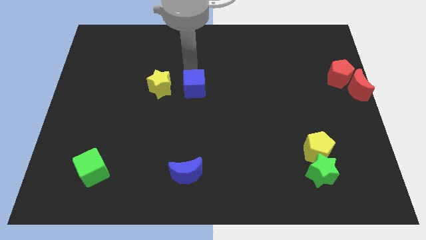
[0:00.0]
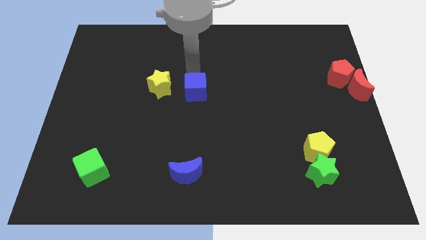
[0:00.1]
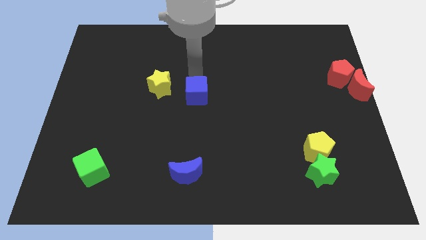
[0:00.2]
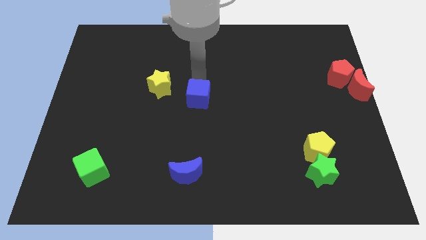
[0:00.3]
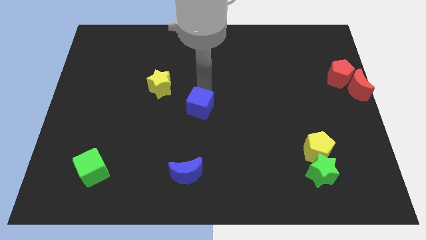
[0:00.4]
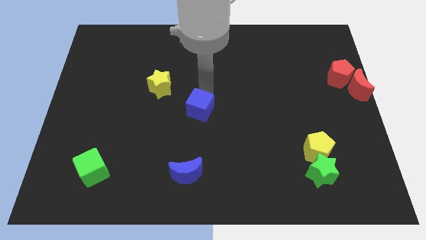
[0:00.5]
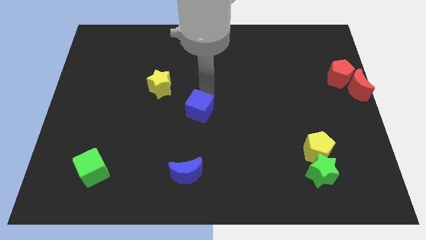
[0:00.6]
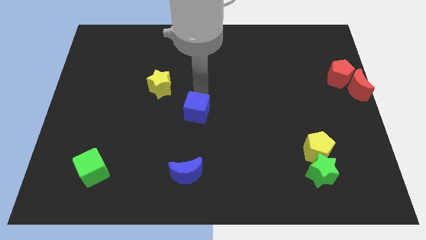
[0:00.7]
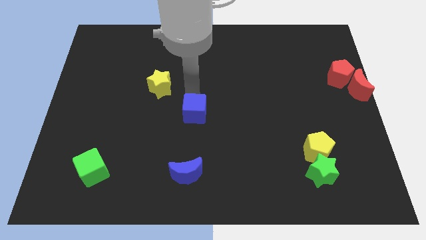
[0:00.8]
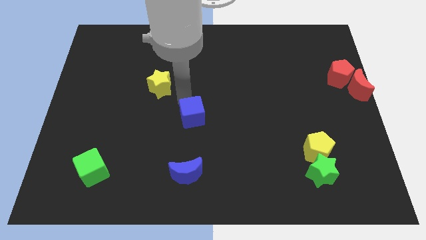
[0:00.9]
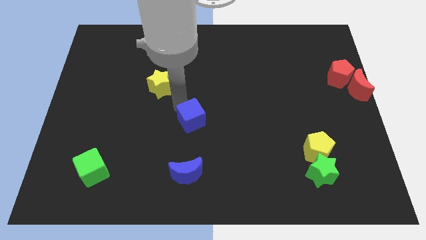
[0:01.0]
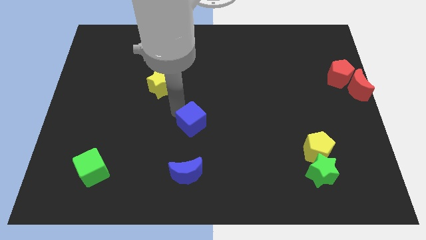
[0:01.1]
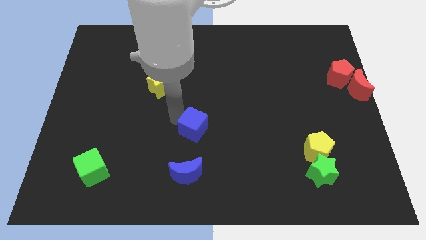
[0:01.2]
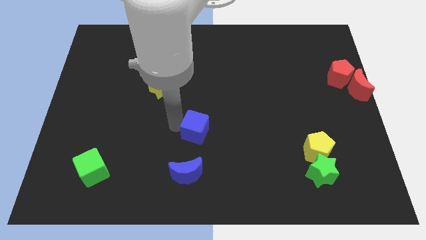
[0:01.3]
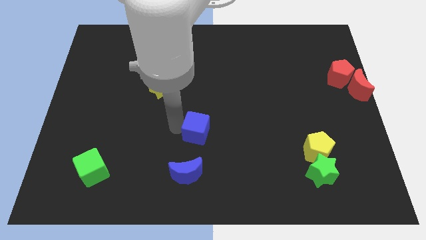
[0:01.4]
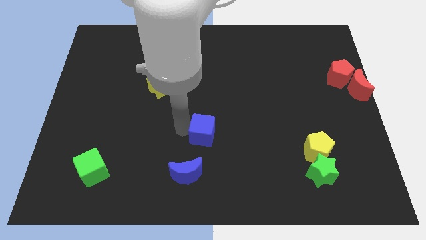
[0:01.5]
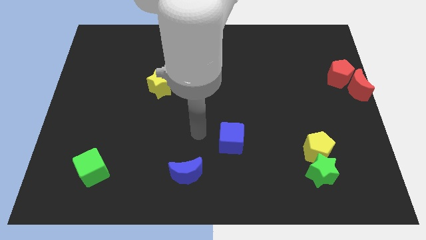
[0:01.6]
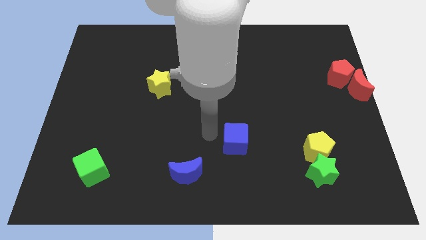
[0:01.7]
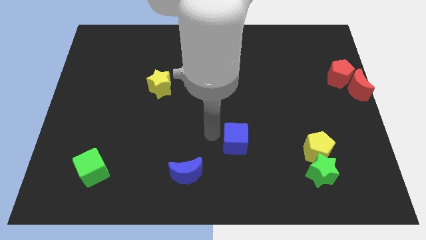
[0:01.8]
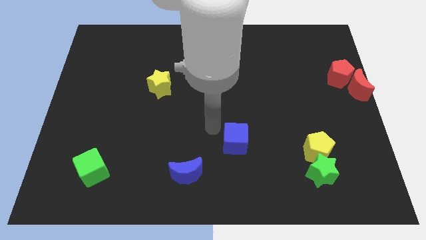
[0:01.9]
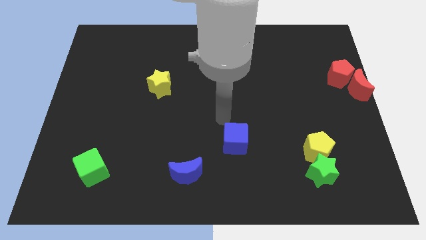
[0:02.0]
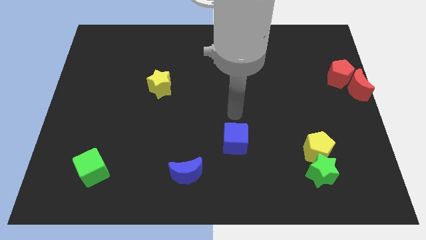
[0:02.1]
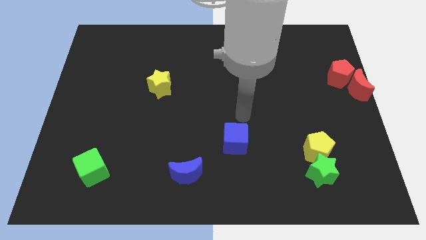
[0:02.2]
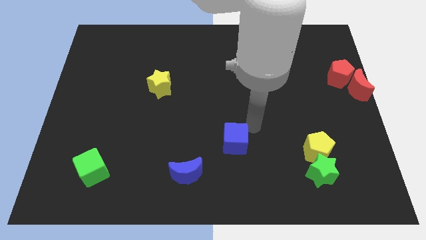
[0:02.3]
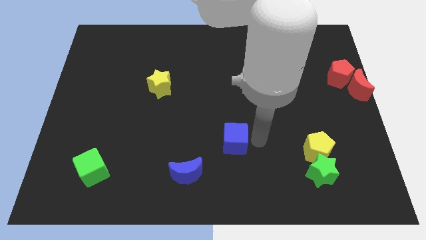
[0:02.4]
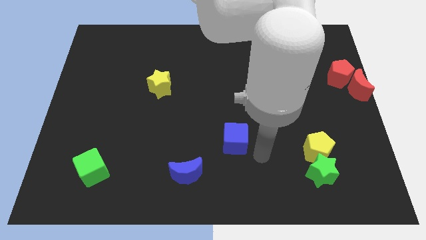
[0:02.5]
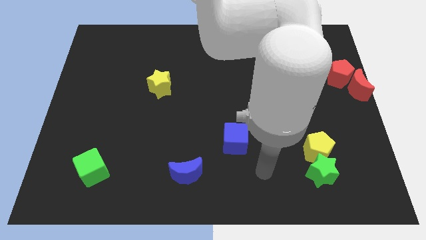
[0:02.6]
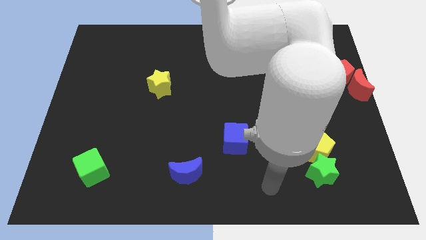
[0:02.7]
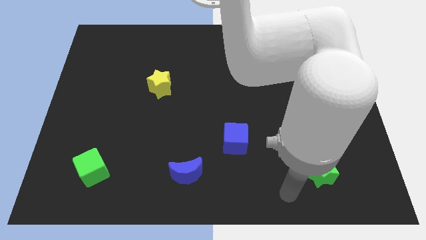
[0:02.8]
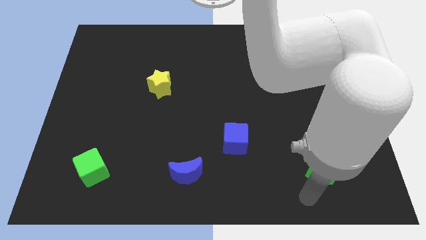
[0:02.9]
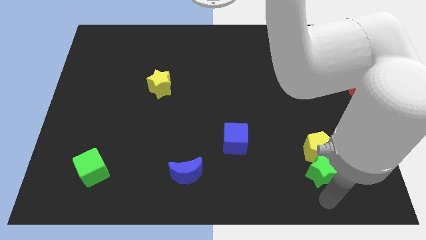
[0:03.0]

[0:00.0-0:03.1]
move blue cube to the bottom

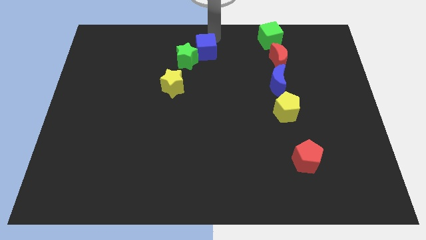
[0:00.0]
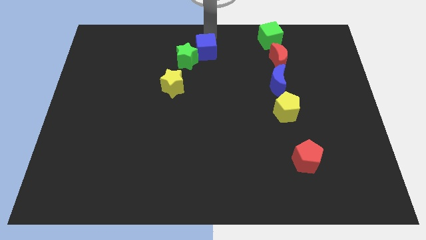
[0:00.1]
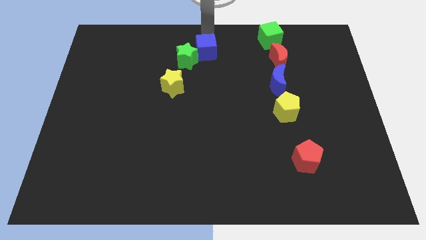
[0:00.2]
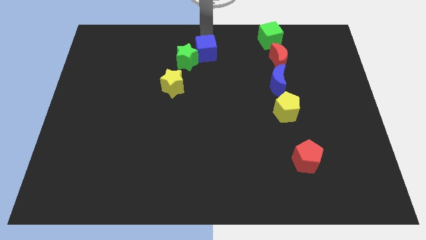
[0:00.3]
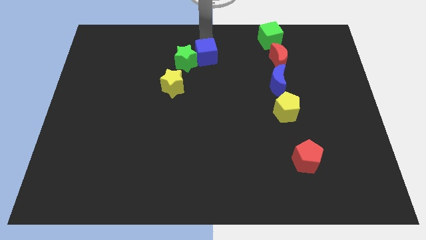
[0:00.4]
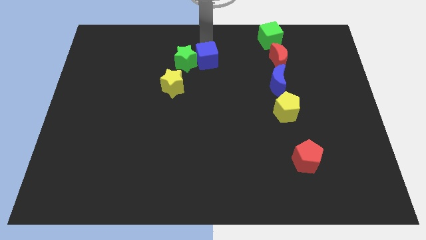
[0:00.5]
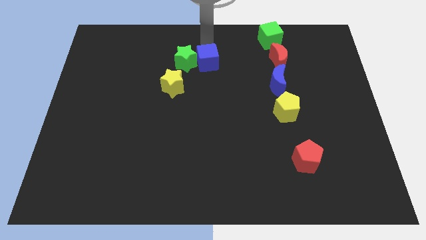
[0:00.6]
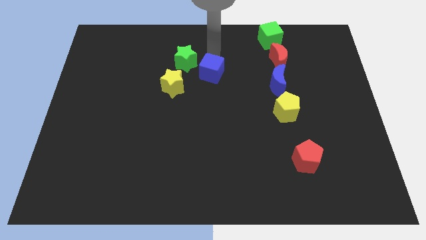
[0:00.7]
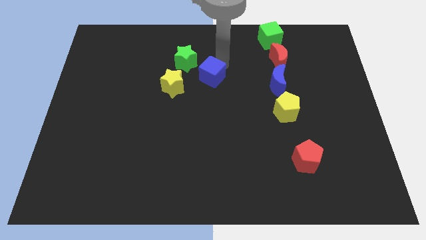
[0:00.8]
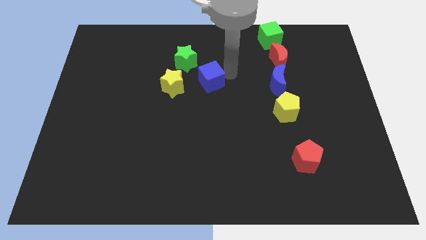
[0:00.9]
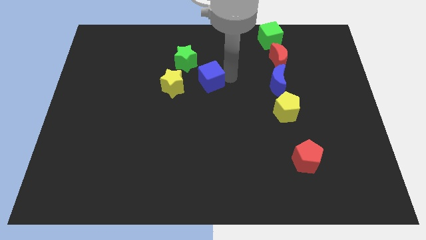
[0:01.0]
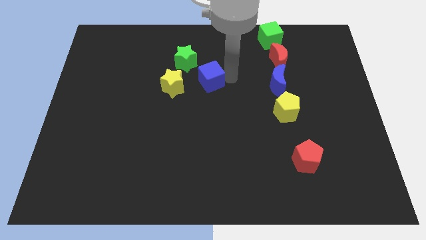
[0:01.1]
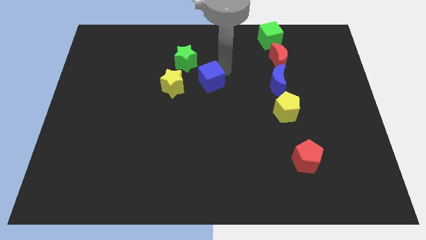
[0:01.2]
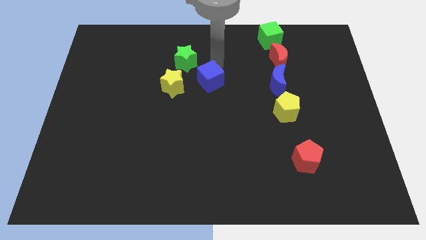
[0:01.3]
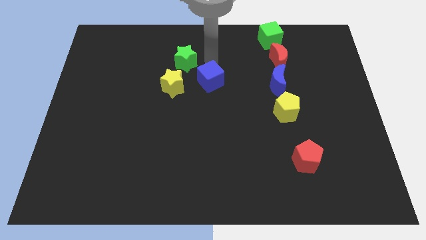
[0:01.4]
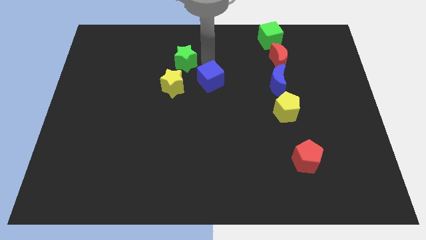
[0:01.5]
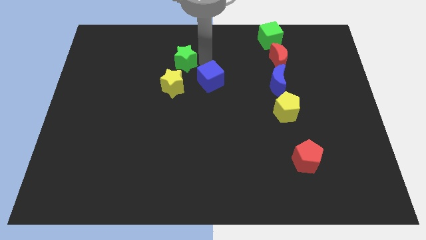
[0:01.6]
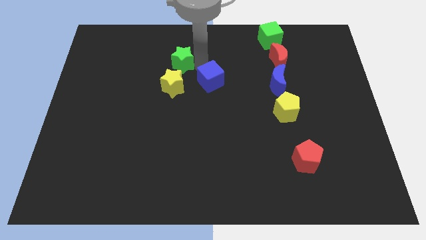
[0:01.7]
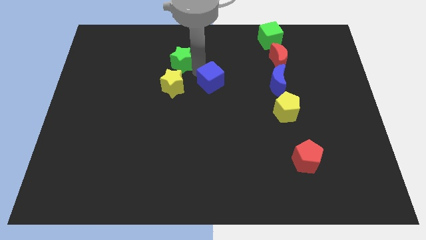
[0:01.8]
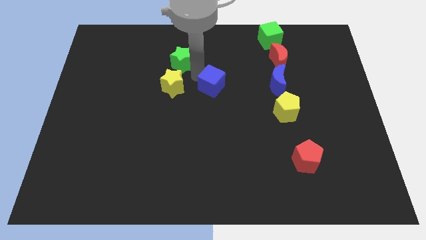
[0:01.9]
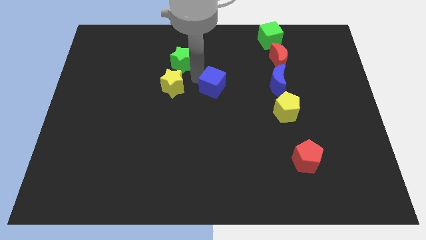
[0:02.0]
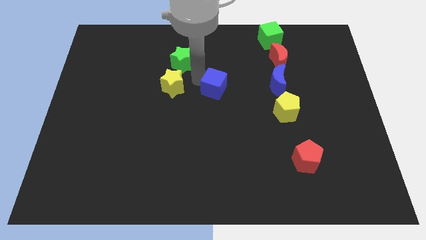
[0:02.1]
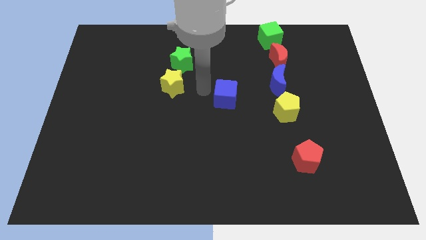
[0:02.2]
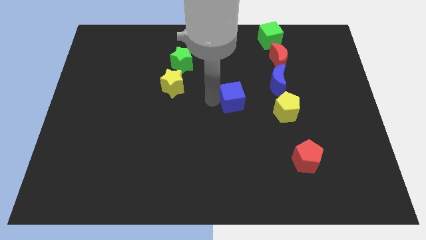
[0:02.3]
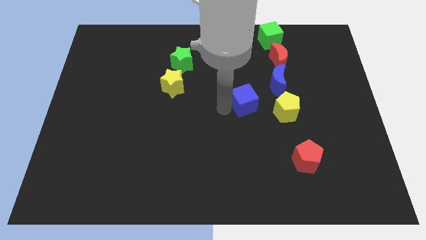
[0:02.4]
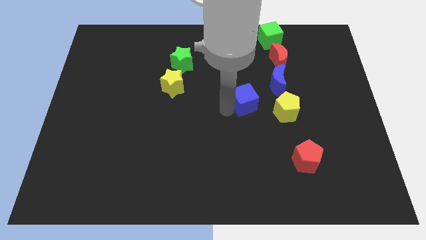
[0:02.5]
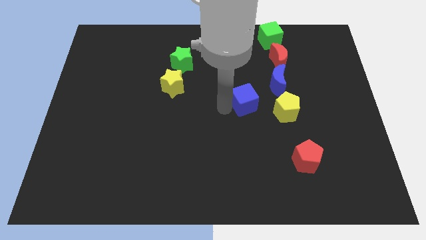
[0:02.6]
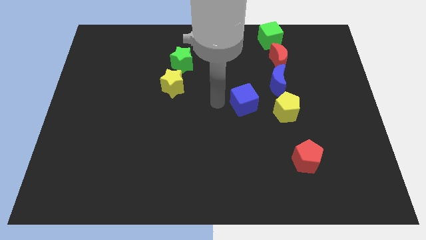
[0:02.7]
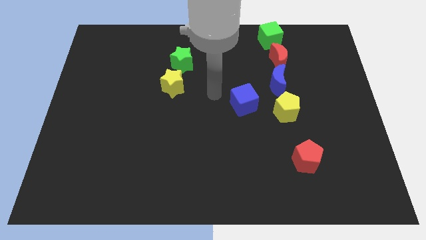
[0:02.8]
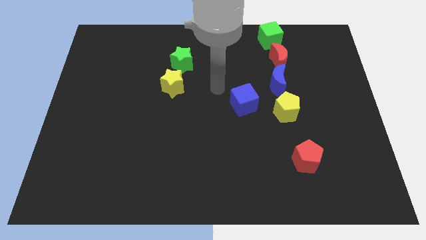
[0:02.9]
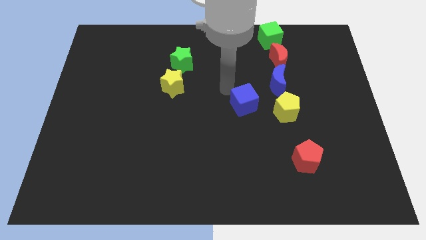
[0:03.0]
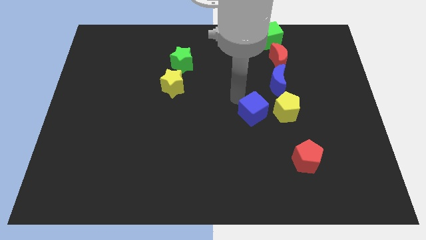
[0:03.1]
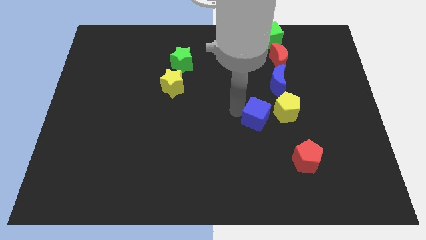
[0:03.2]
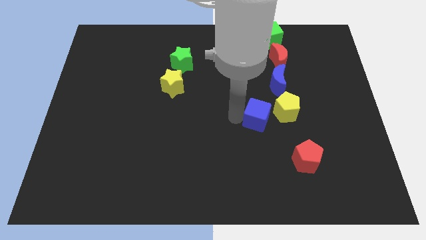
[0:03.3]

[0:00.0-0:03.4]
separate the blue cube and green star

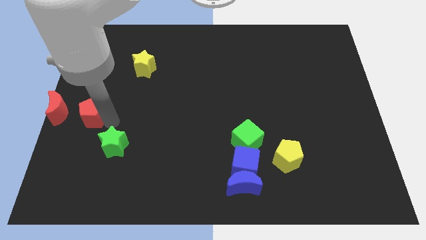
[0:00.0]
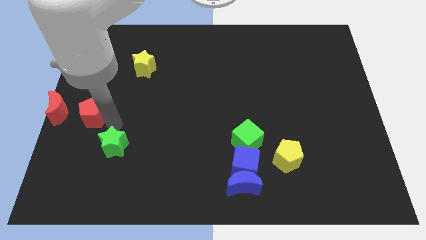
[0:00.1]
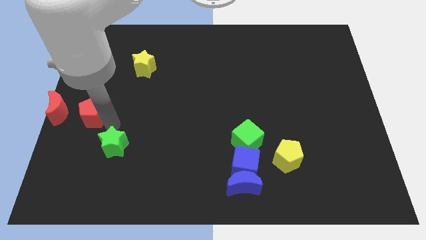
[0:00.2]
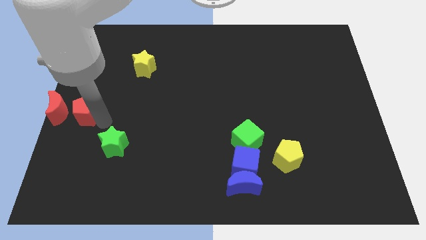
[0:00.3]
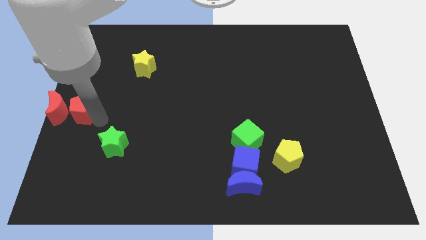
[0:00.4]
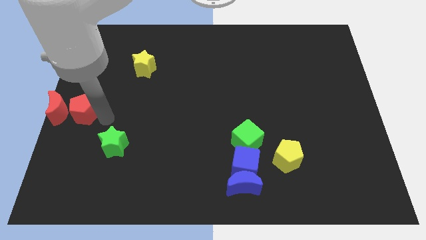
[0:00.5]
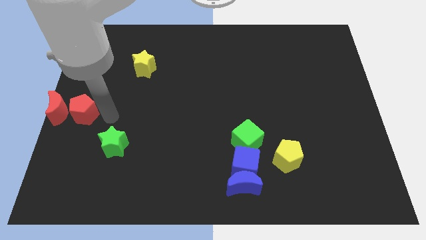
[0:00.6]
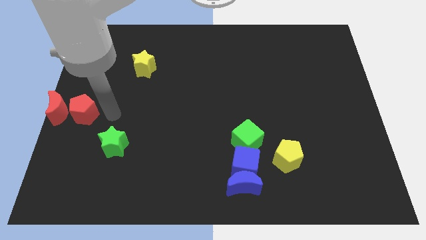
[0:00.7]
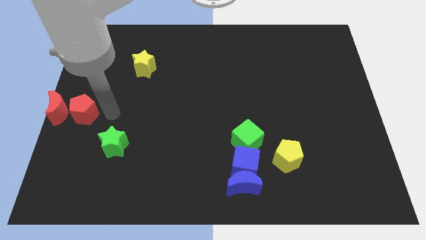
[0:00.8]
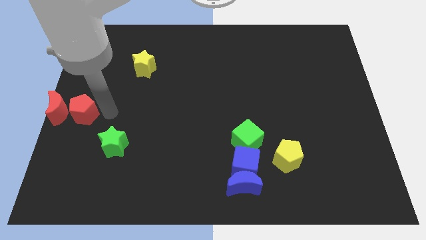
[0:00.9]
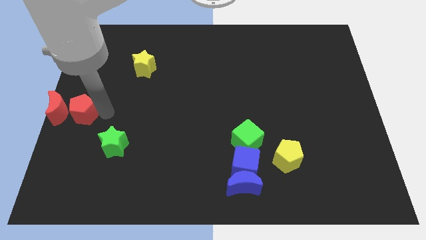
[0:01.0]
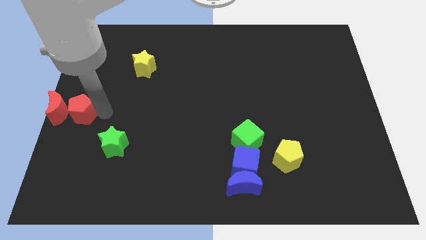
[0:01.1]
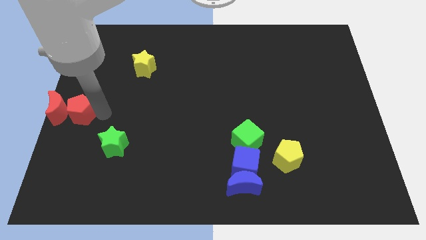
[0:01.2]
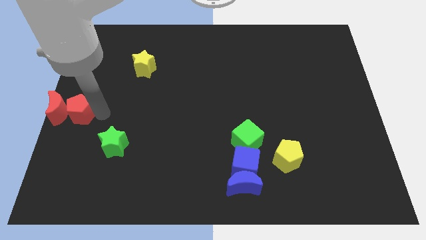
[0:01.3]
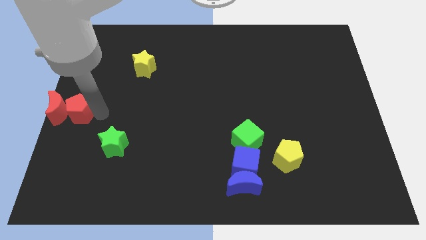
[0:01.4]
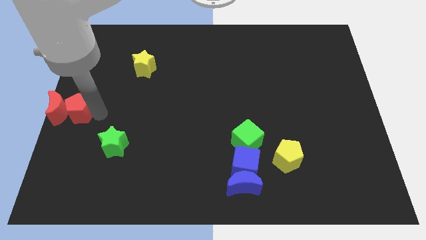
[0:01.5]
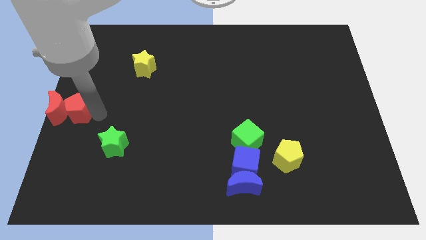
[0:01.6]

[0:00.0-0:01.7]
move the red pentagon into the red moon

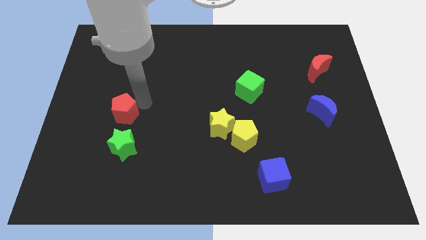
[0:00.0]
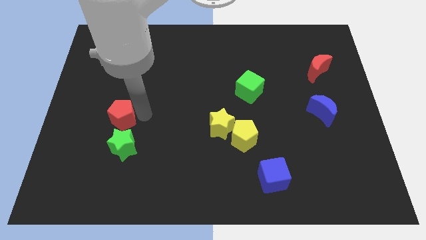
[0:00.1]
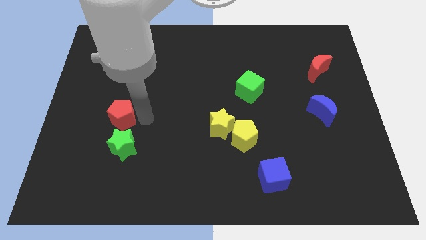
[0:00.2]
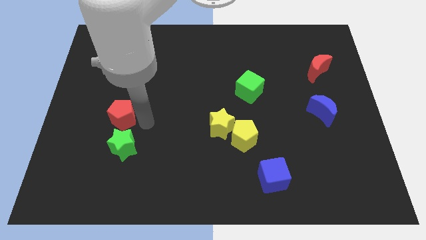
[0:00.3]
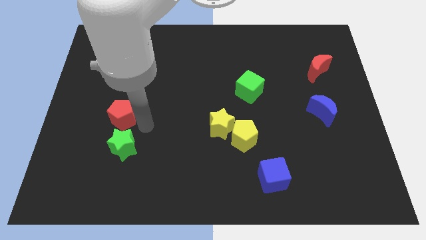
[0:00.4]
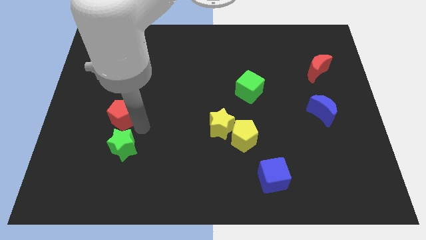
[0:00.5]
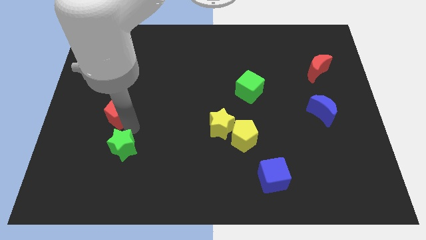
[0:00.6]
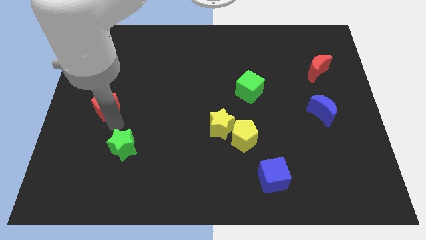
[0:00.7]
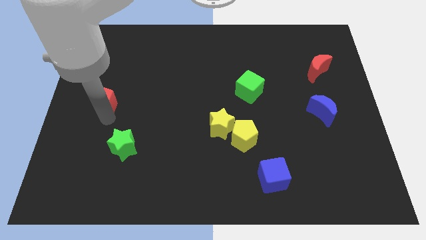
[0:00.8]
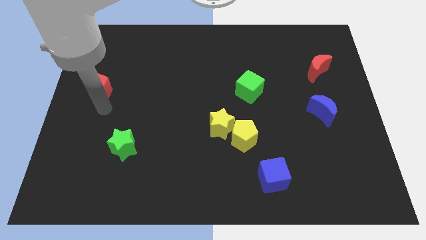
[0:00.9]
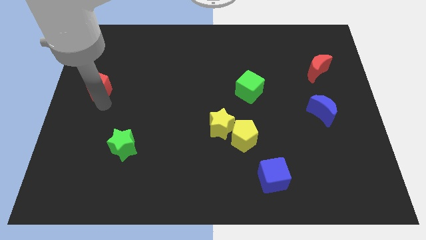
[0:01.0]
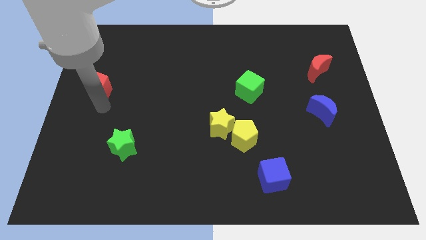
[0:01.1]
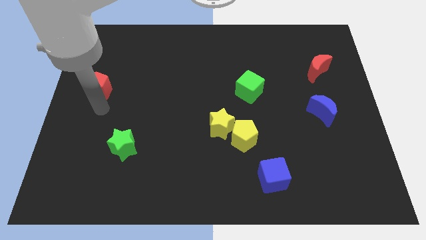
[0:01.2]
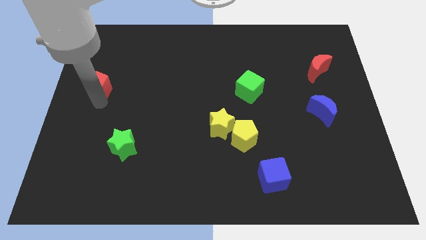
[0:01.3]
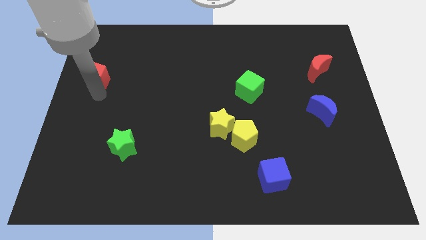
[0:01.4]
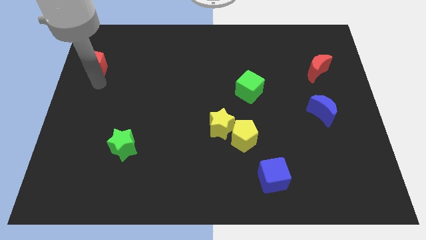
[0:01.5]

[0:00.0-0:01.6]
push the red pentagon away from the green star
